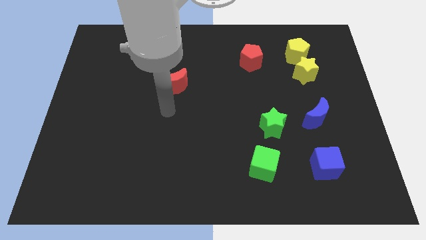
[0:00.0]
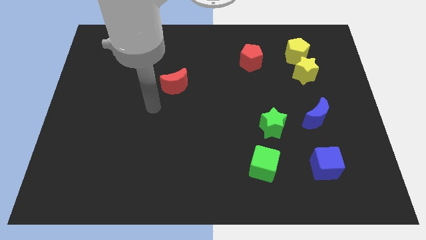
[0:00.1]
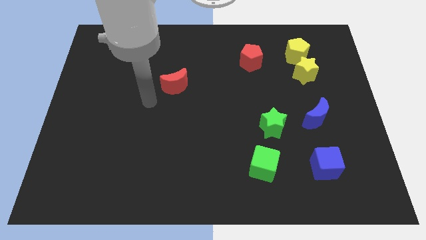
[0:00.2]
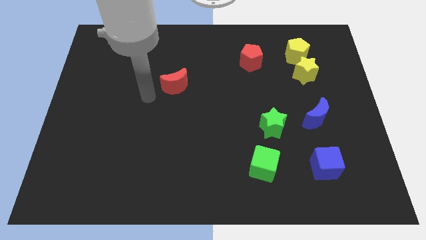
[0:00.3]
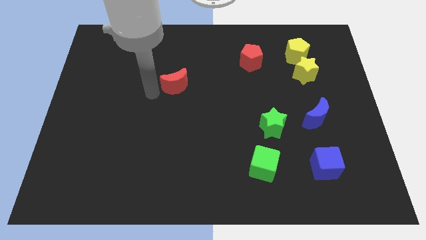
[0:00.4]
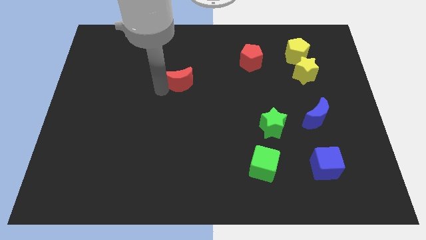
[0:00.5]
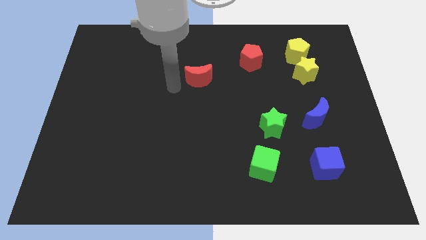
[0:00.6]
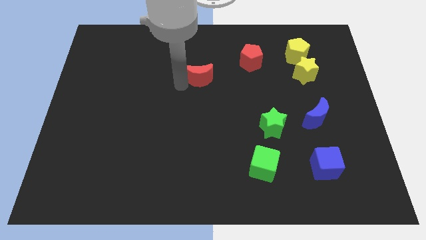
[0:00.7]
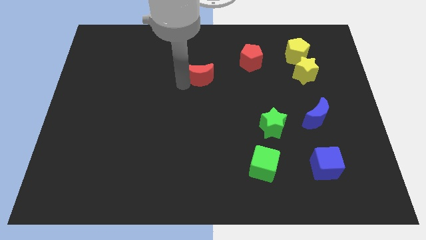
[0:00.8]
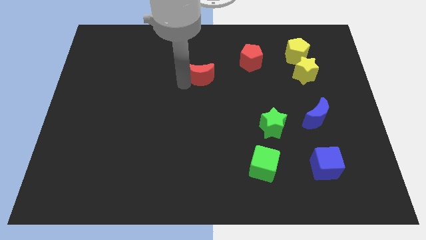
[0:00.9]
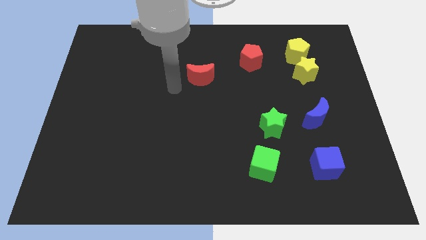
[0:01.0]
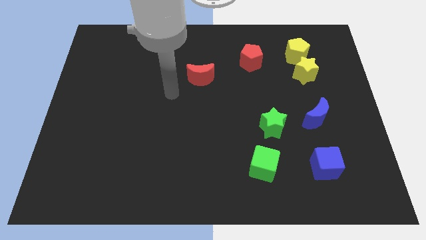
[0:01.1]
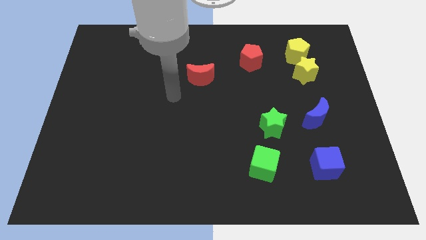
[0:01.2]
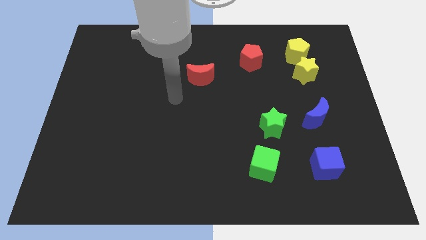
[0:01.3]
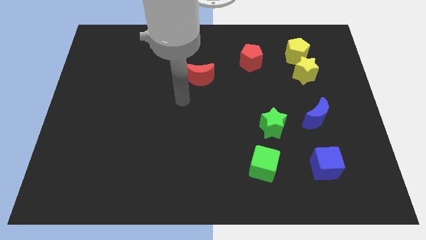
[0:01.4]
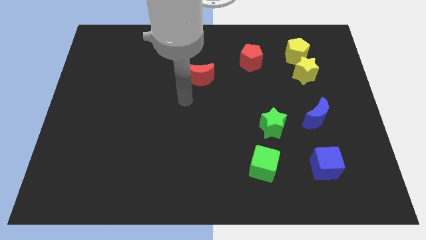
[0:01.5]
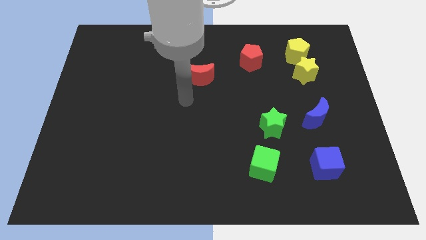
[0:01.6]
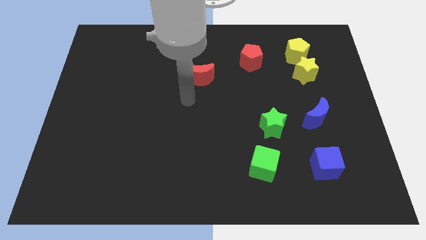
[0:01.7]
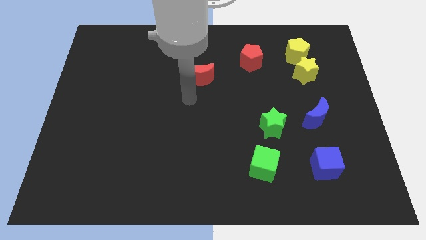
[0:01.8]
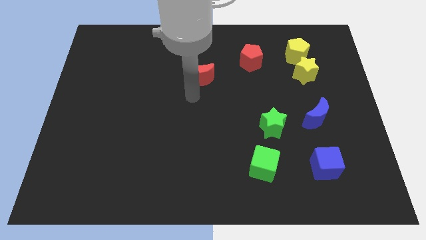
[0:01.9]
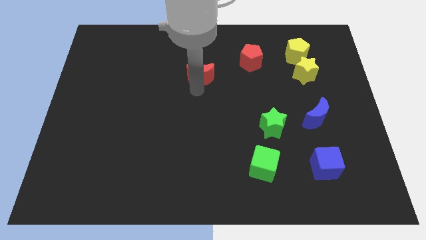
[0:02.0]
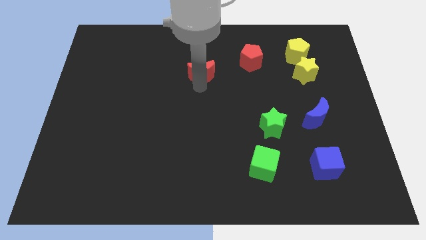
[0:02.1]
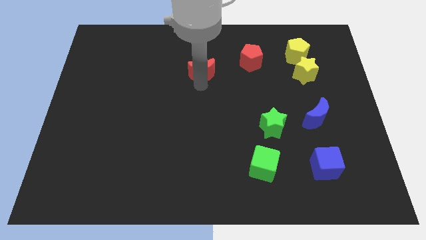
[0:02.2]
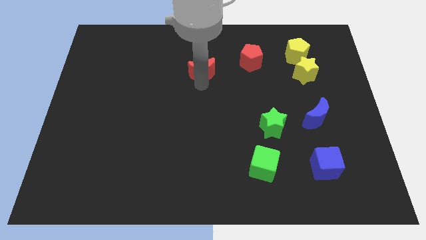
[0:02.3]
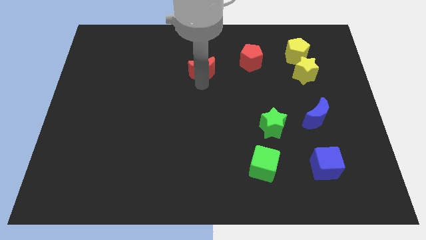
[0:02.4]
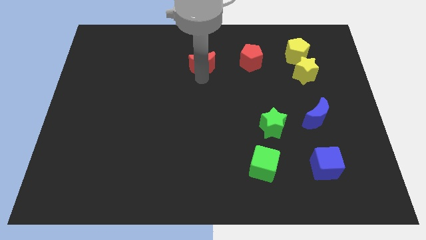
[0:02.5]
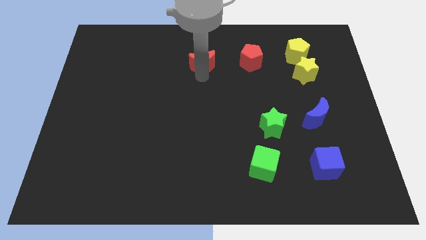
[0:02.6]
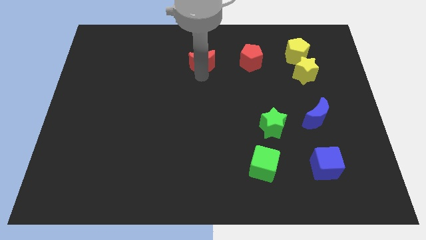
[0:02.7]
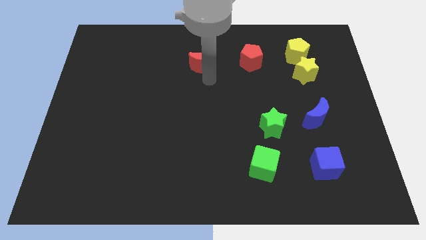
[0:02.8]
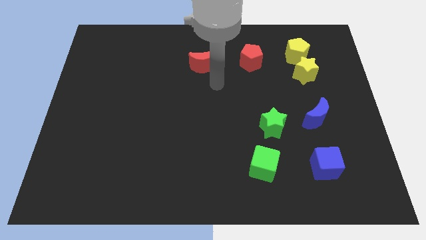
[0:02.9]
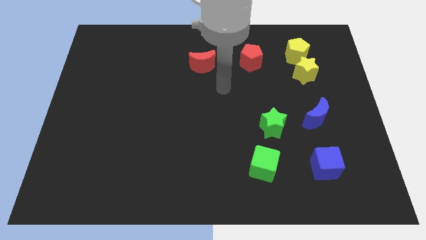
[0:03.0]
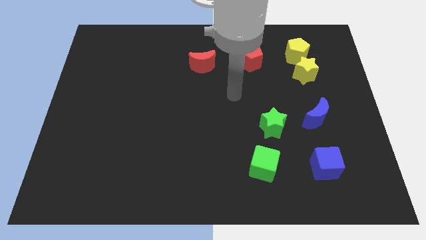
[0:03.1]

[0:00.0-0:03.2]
place the red moon left to the red pentagon

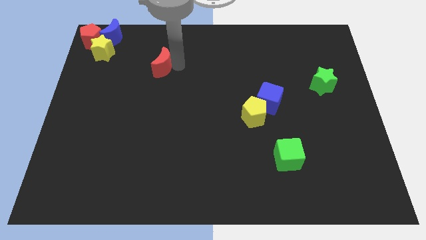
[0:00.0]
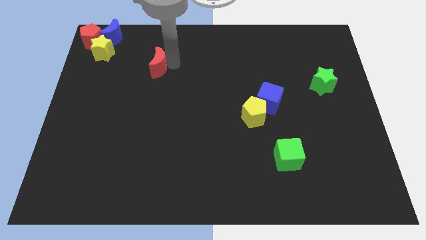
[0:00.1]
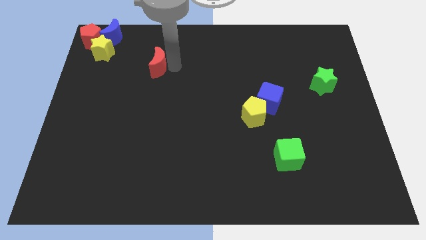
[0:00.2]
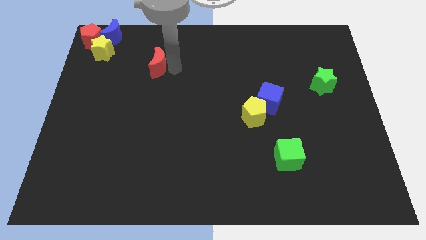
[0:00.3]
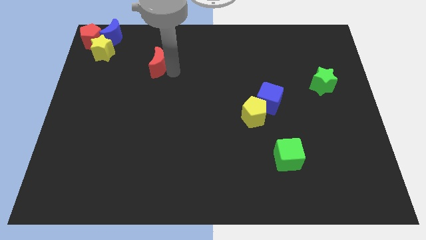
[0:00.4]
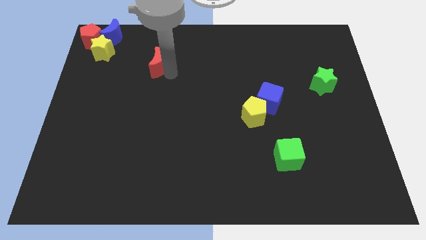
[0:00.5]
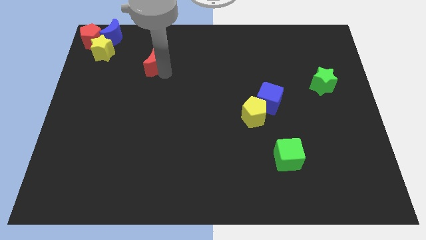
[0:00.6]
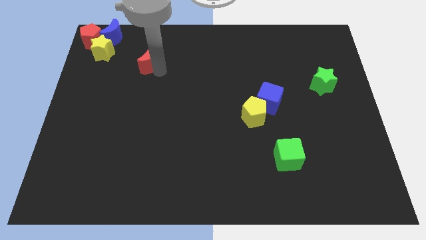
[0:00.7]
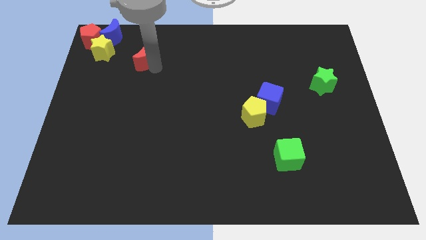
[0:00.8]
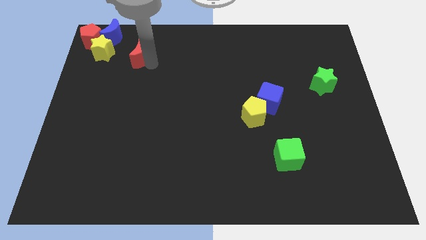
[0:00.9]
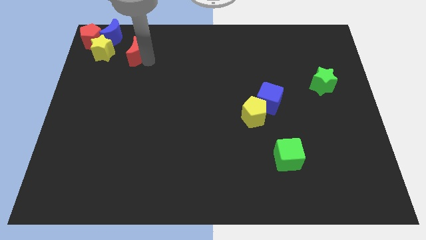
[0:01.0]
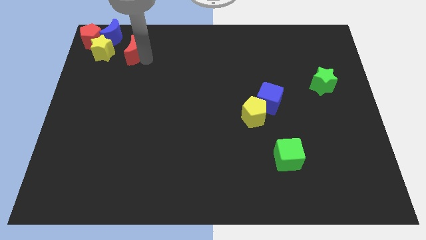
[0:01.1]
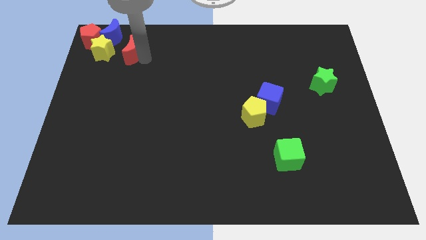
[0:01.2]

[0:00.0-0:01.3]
push the red crescent to the right of the yellow star

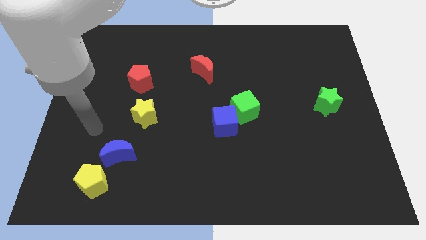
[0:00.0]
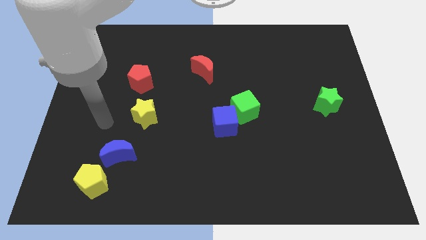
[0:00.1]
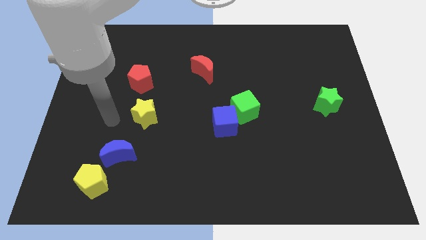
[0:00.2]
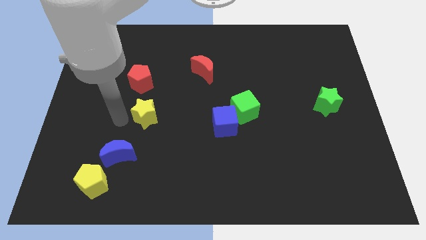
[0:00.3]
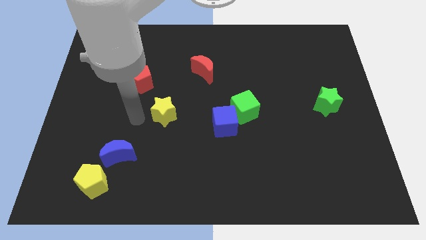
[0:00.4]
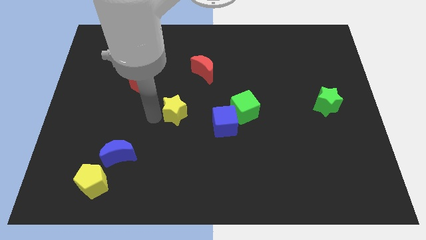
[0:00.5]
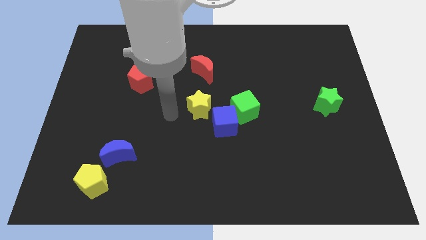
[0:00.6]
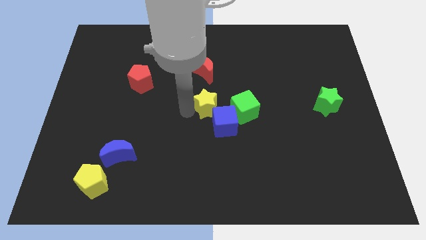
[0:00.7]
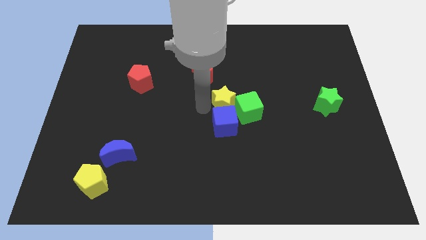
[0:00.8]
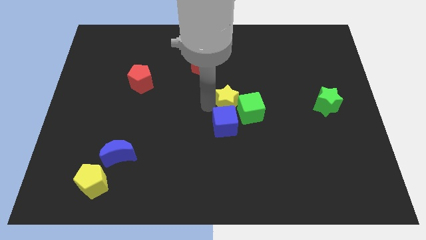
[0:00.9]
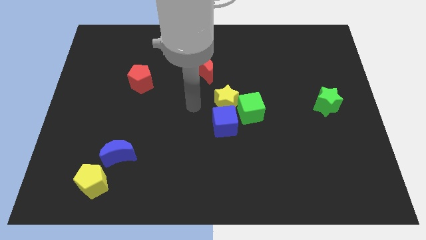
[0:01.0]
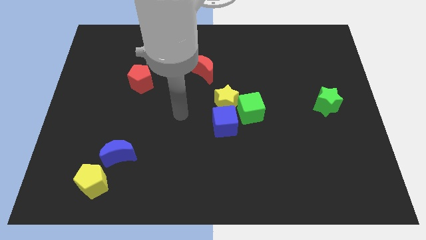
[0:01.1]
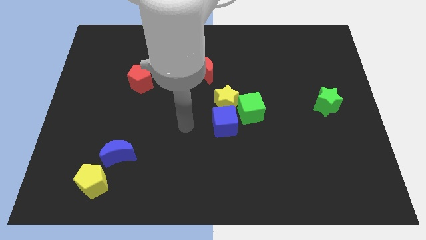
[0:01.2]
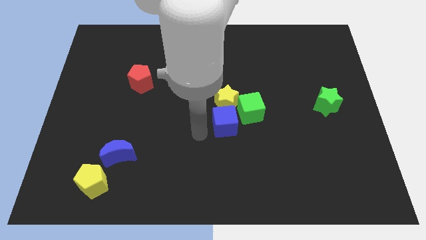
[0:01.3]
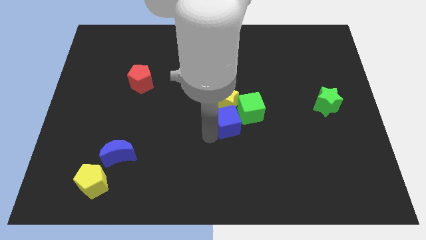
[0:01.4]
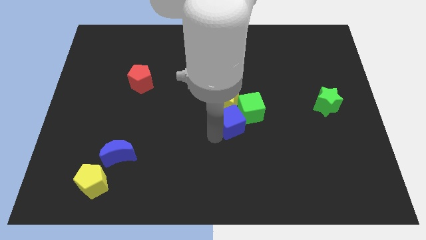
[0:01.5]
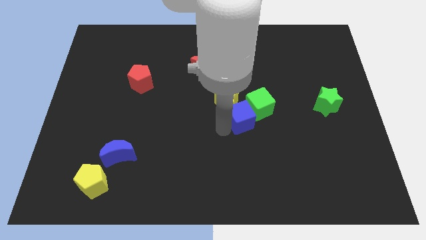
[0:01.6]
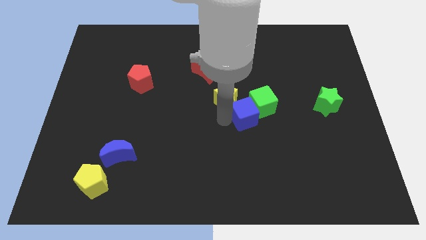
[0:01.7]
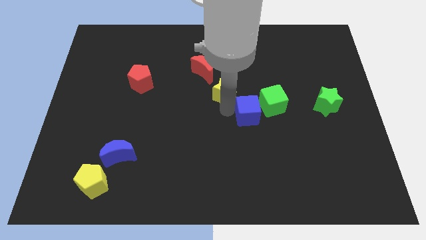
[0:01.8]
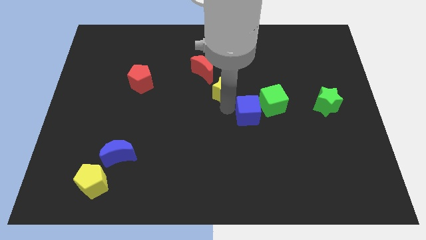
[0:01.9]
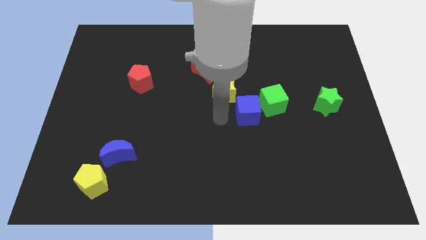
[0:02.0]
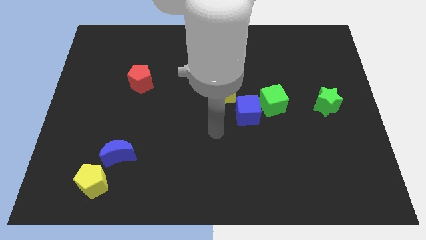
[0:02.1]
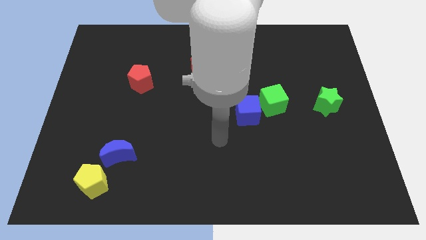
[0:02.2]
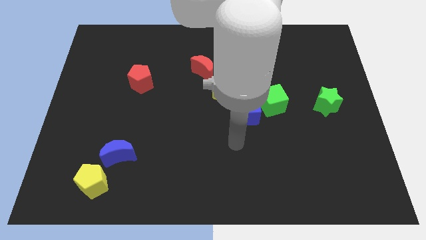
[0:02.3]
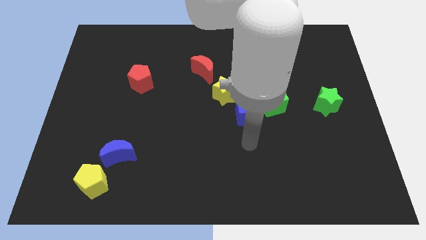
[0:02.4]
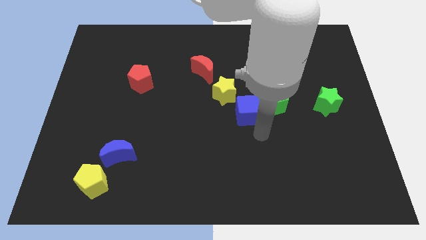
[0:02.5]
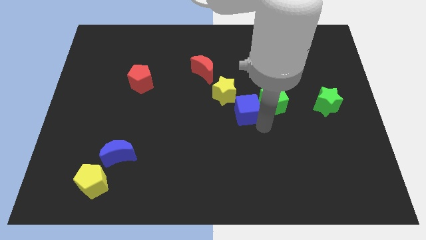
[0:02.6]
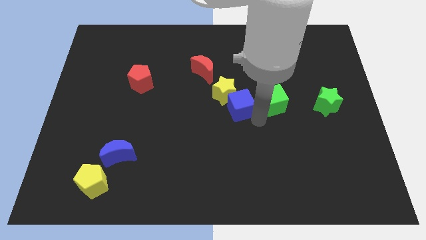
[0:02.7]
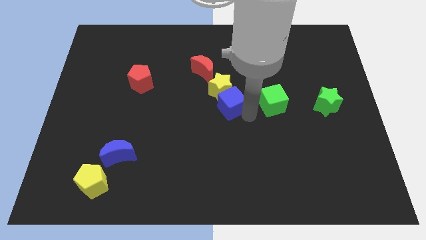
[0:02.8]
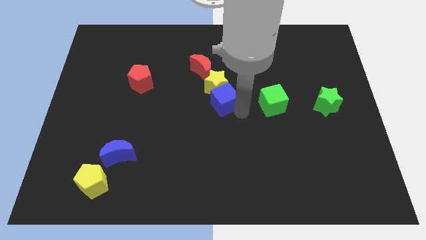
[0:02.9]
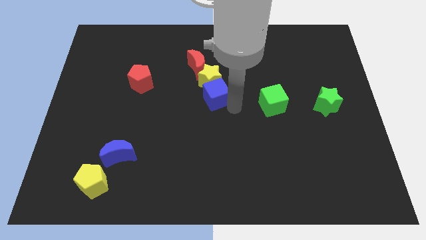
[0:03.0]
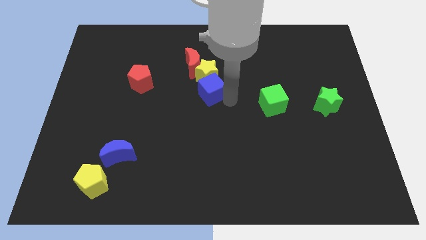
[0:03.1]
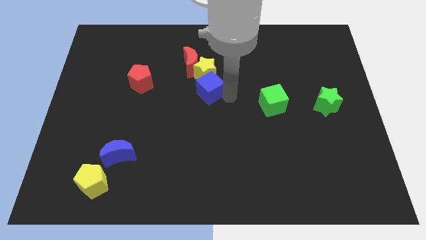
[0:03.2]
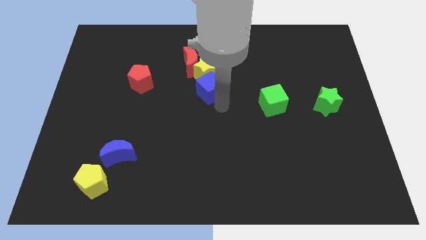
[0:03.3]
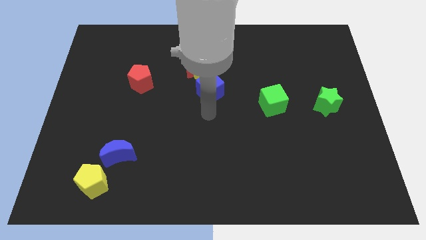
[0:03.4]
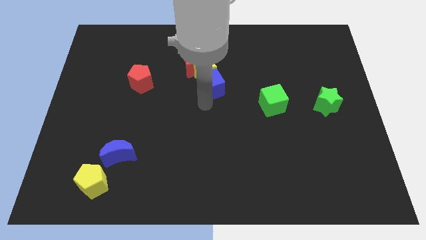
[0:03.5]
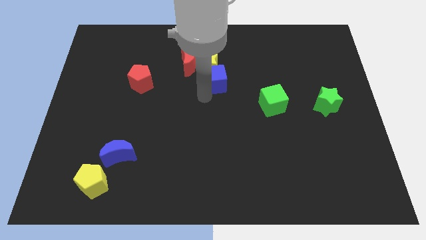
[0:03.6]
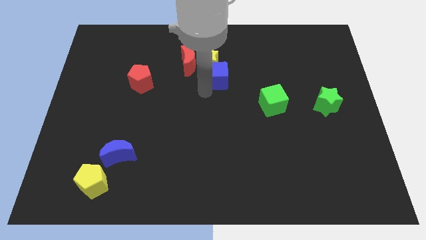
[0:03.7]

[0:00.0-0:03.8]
move the yellow star and blue cube into the bottom side of the red moon

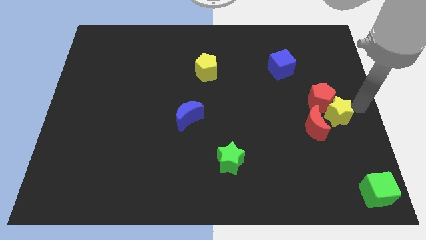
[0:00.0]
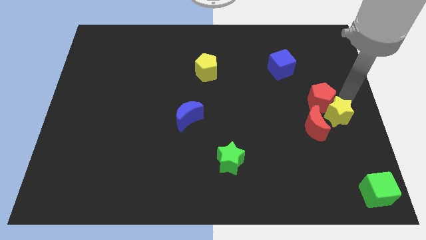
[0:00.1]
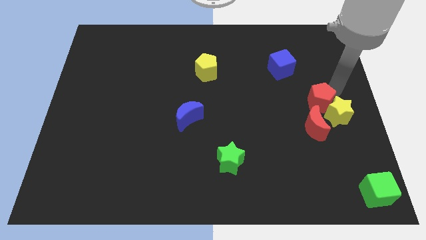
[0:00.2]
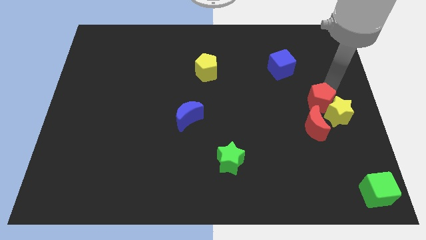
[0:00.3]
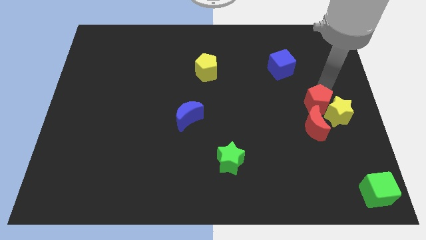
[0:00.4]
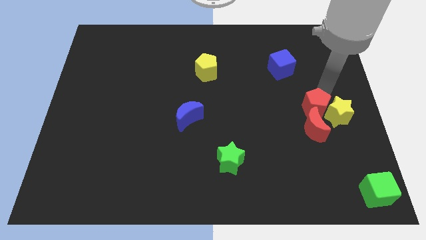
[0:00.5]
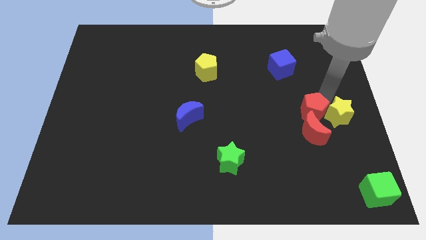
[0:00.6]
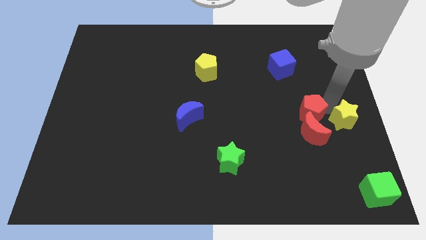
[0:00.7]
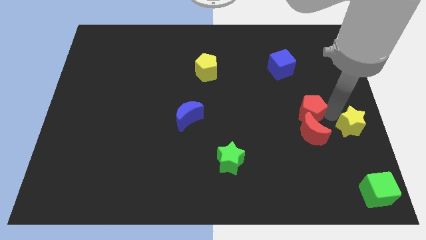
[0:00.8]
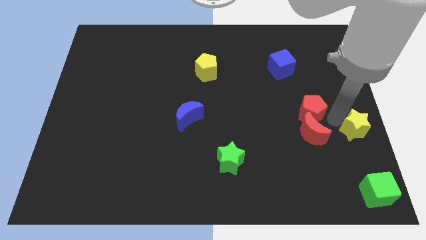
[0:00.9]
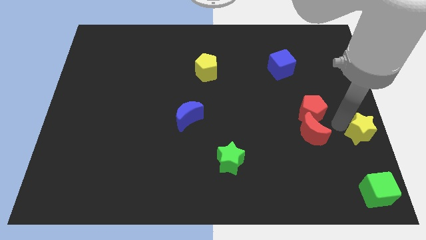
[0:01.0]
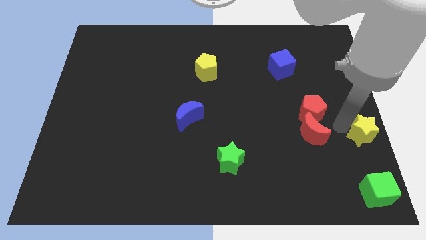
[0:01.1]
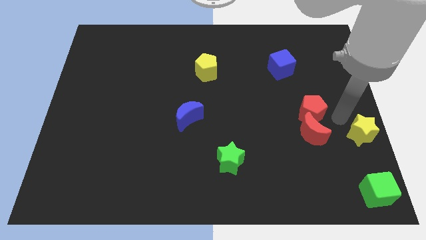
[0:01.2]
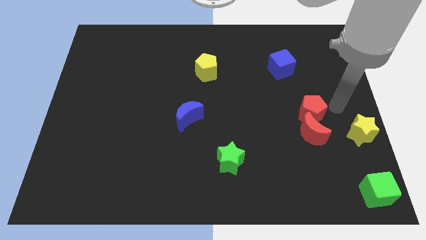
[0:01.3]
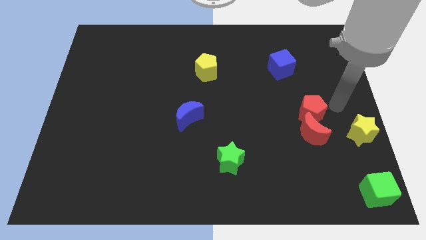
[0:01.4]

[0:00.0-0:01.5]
separate the yellow star and the red blocks
